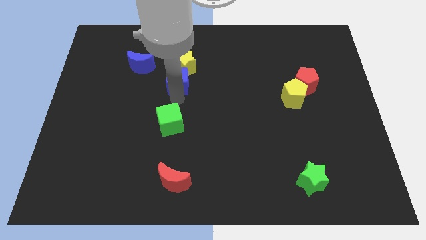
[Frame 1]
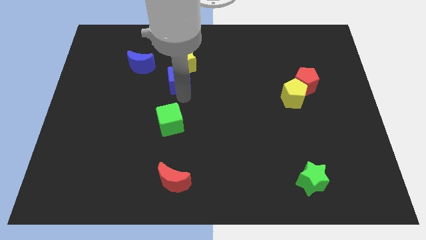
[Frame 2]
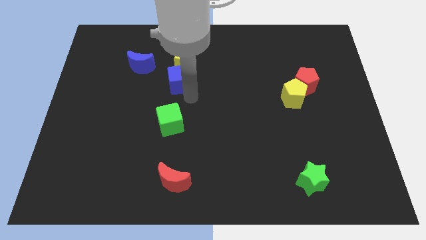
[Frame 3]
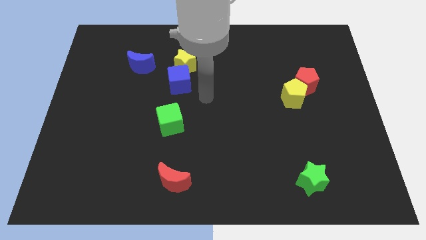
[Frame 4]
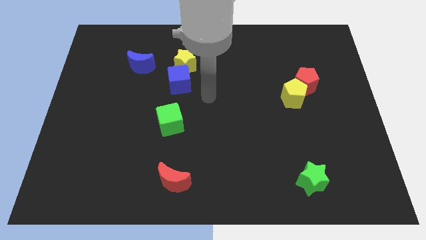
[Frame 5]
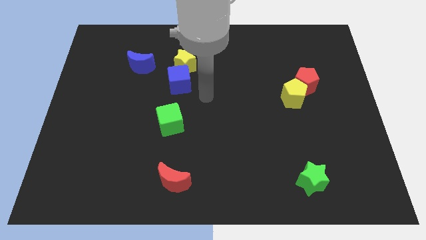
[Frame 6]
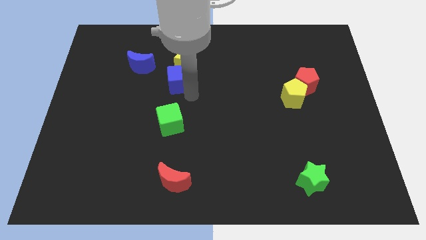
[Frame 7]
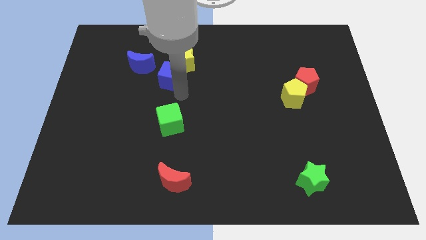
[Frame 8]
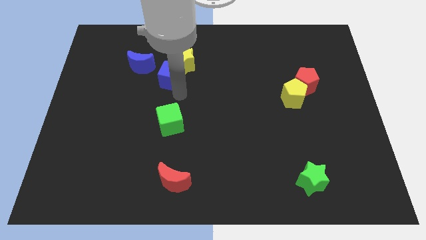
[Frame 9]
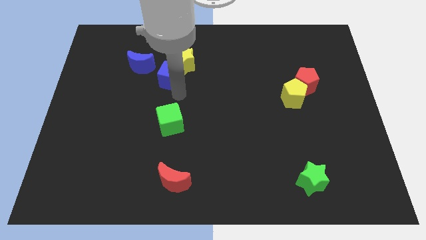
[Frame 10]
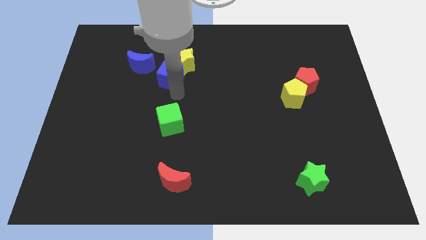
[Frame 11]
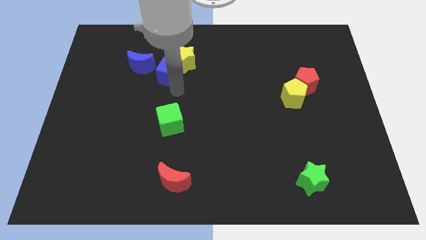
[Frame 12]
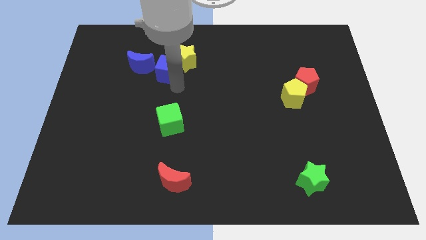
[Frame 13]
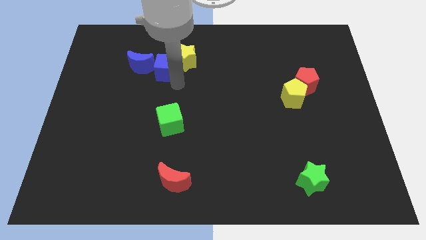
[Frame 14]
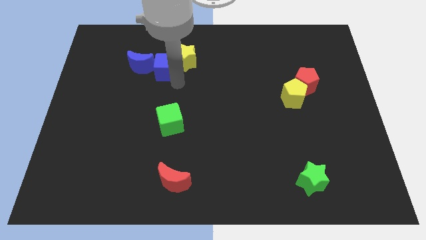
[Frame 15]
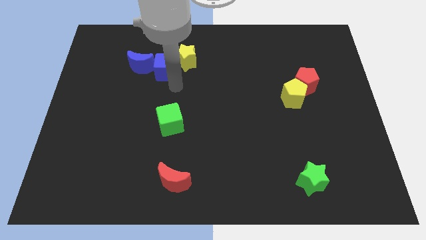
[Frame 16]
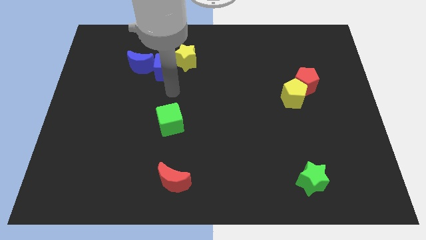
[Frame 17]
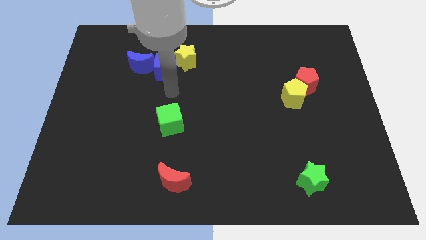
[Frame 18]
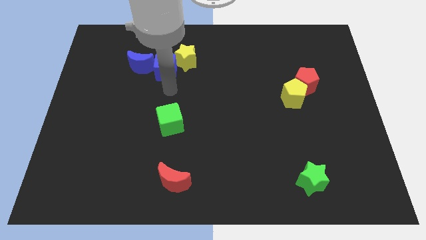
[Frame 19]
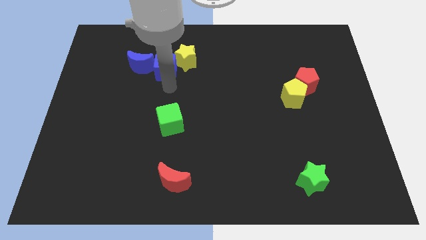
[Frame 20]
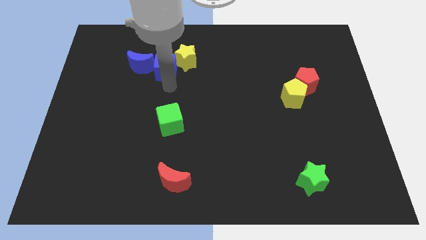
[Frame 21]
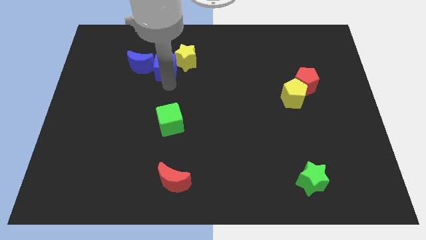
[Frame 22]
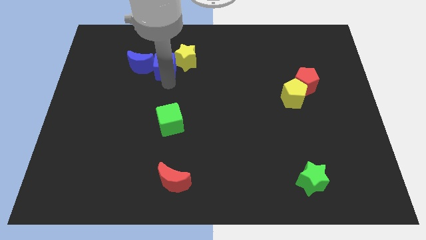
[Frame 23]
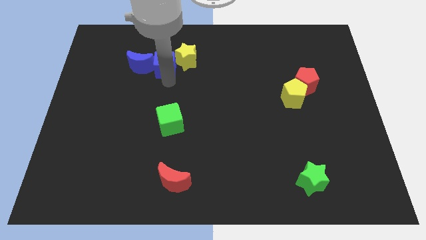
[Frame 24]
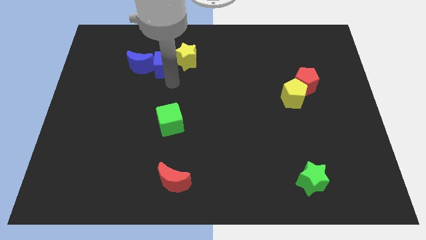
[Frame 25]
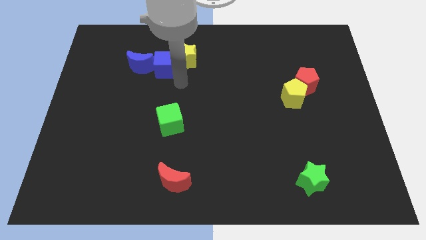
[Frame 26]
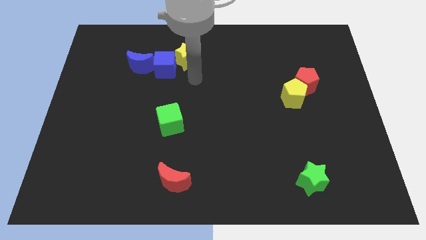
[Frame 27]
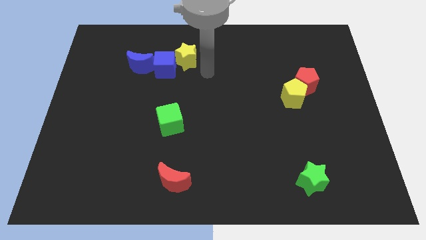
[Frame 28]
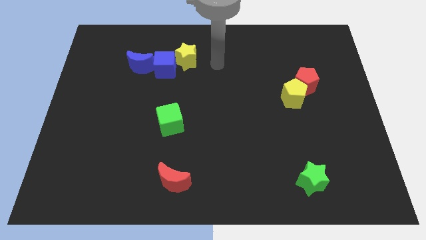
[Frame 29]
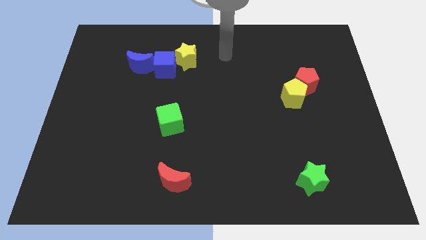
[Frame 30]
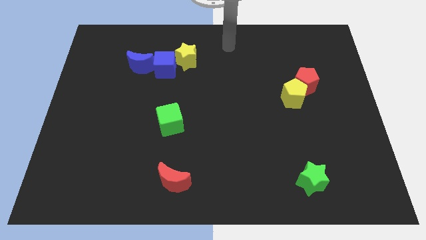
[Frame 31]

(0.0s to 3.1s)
place the blue cube in between the blue moon and the yellow star

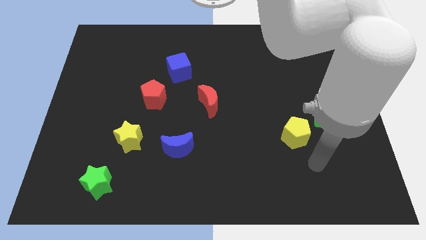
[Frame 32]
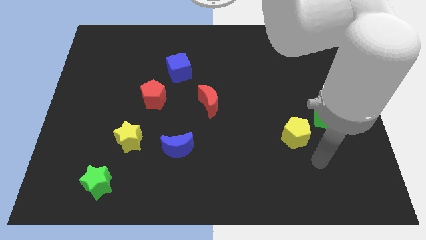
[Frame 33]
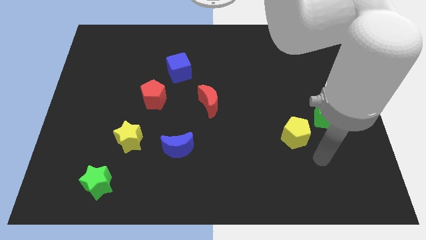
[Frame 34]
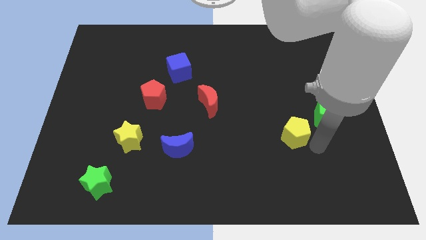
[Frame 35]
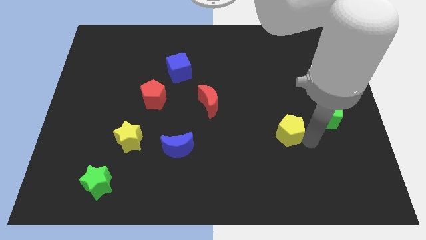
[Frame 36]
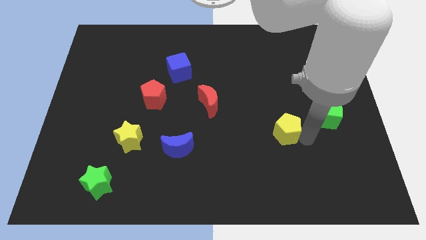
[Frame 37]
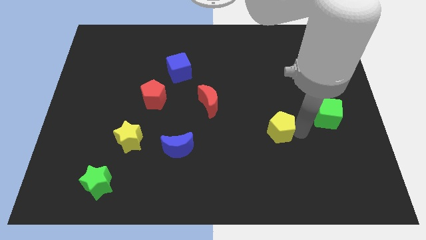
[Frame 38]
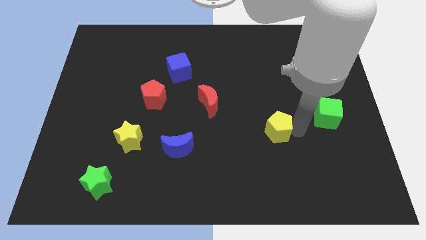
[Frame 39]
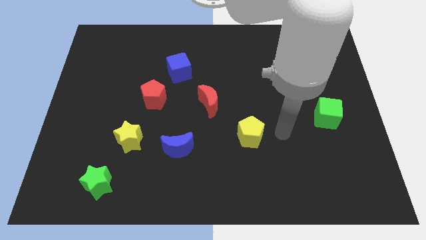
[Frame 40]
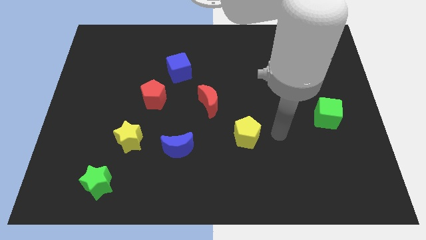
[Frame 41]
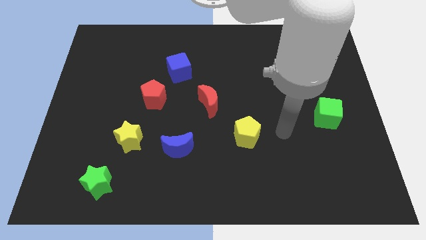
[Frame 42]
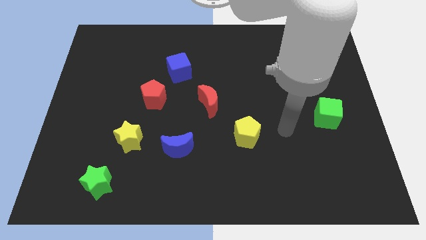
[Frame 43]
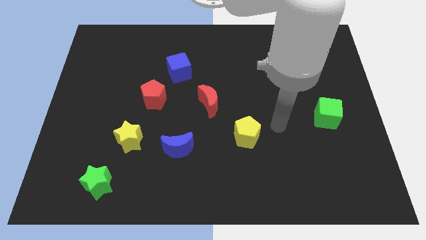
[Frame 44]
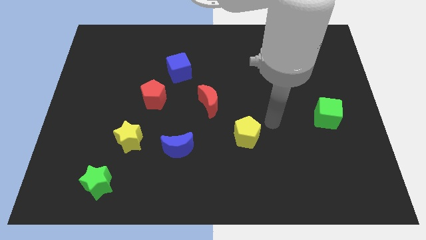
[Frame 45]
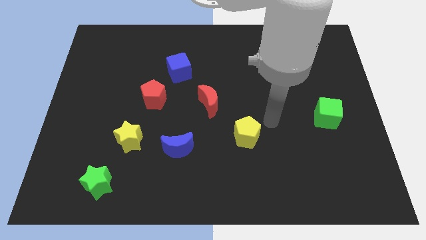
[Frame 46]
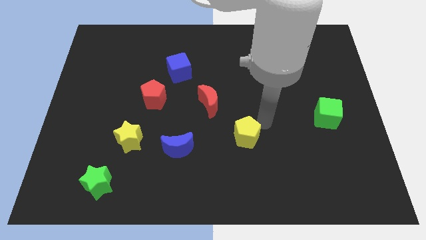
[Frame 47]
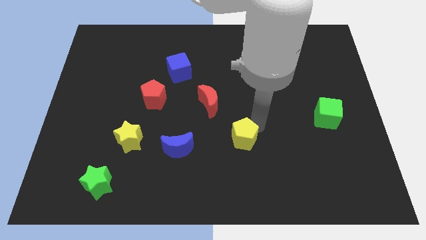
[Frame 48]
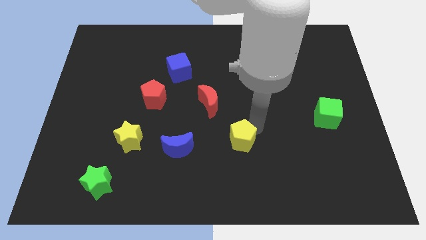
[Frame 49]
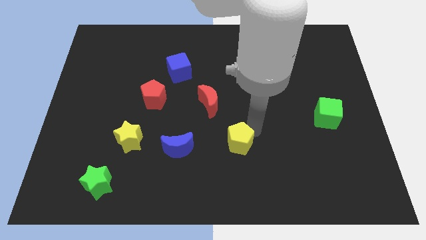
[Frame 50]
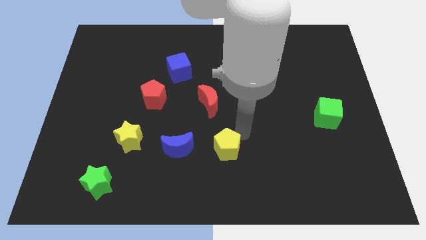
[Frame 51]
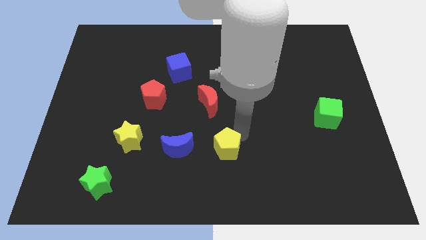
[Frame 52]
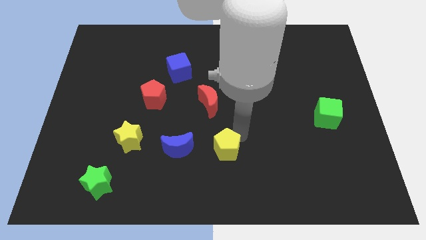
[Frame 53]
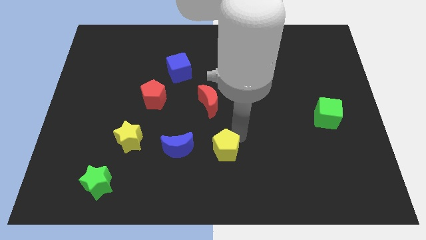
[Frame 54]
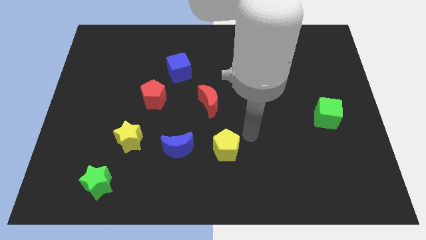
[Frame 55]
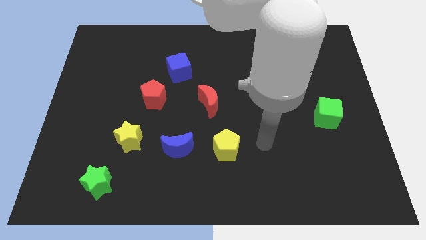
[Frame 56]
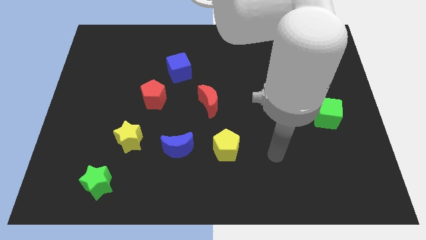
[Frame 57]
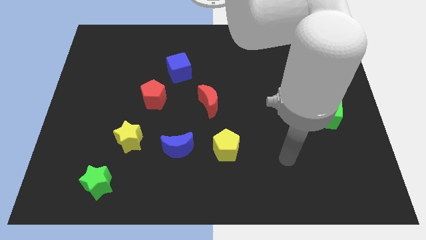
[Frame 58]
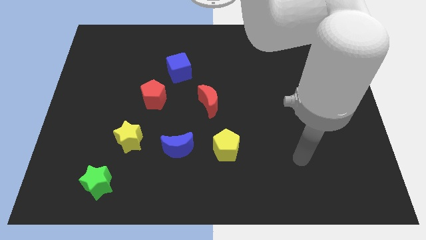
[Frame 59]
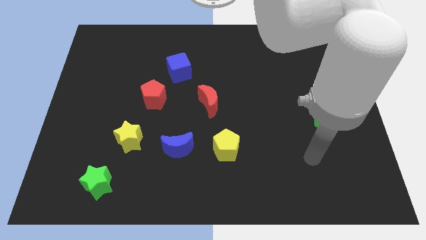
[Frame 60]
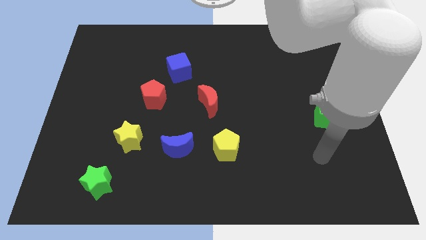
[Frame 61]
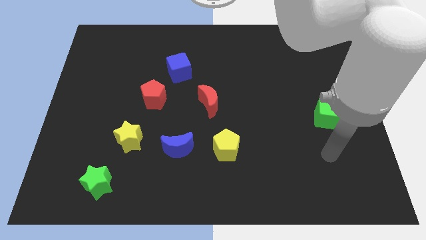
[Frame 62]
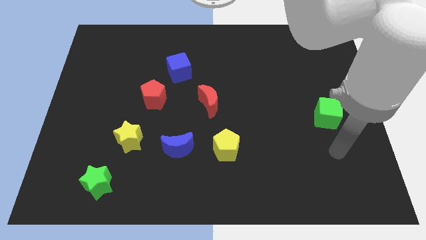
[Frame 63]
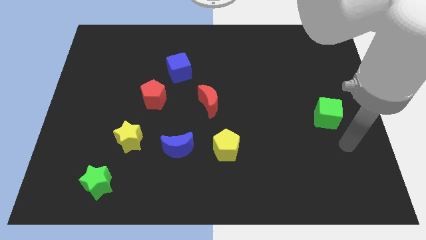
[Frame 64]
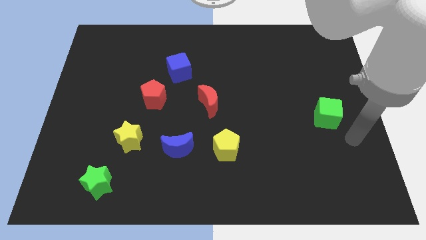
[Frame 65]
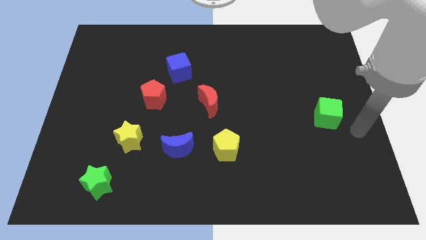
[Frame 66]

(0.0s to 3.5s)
move the yellow pentagon to the right of the blue moon

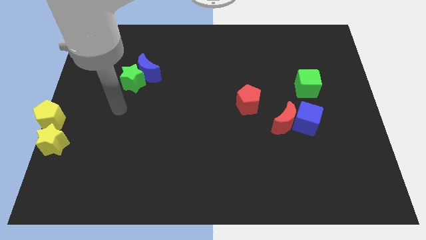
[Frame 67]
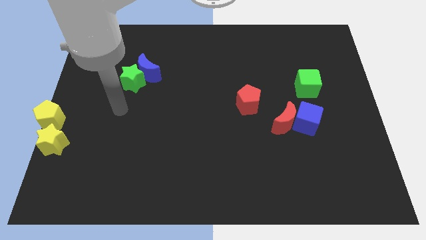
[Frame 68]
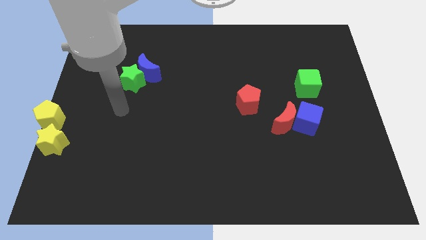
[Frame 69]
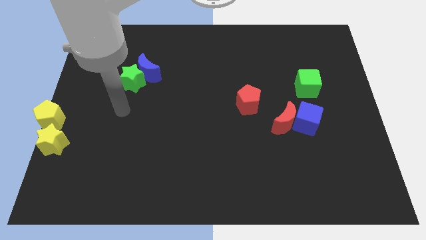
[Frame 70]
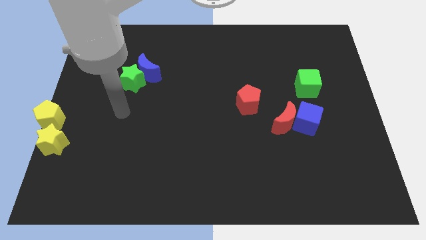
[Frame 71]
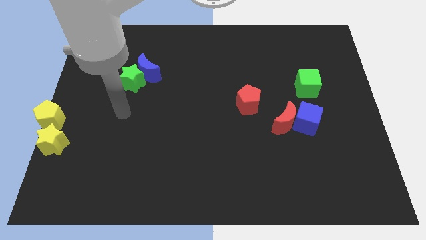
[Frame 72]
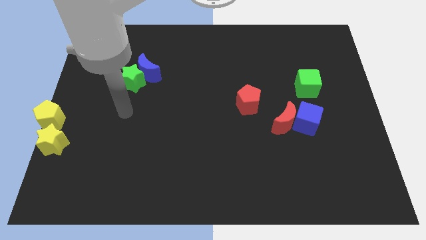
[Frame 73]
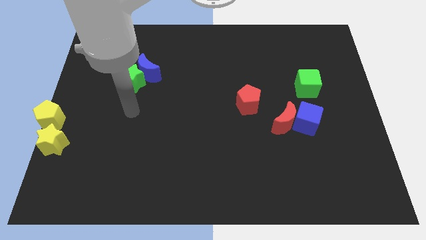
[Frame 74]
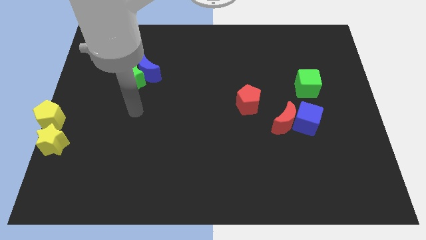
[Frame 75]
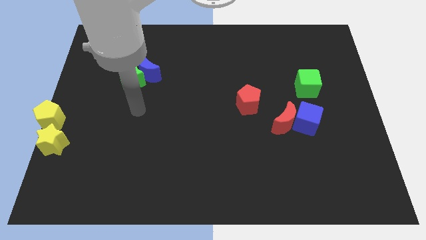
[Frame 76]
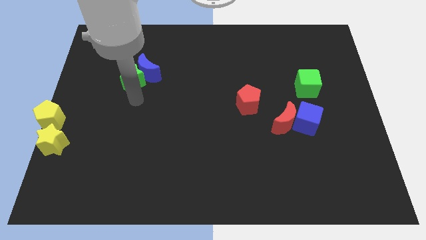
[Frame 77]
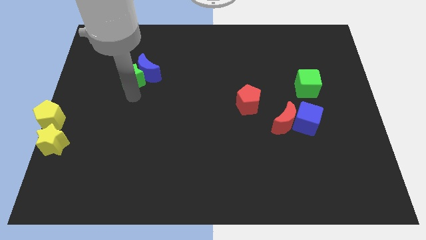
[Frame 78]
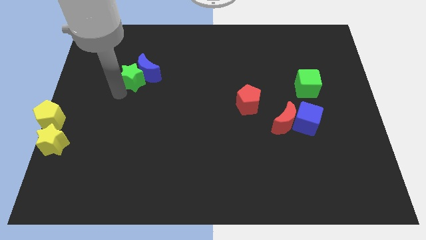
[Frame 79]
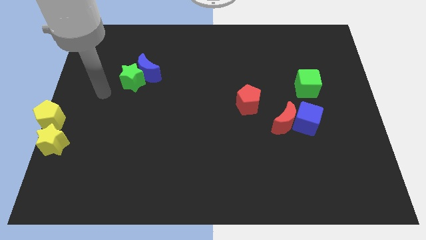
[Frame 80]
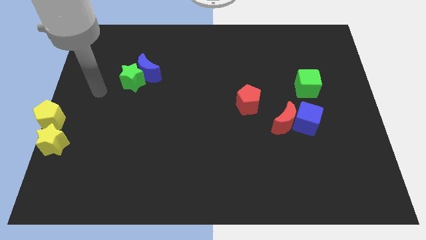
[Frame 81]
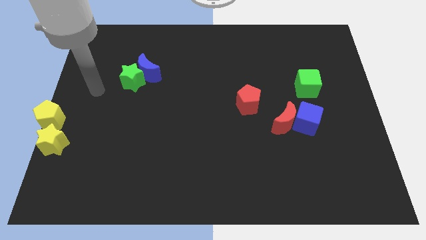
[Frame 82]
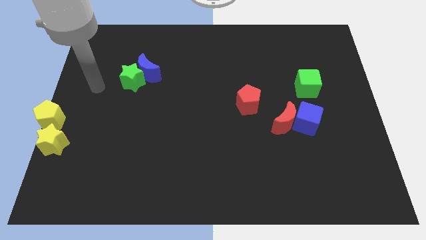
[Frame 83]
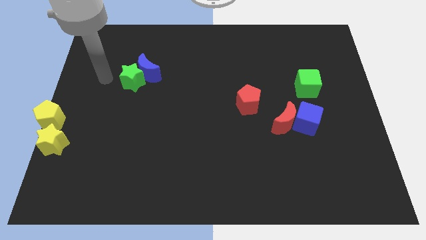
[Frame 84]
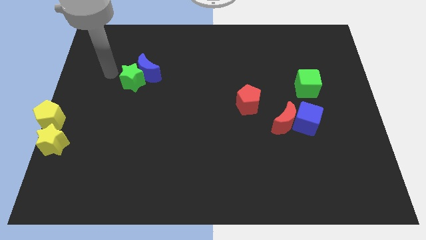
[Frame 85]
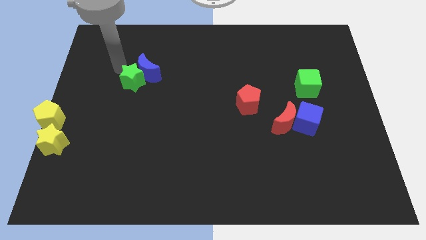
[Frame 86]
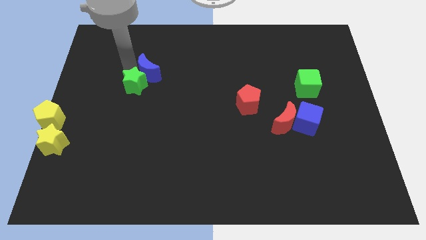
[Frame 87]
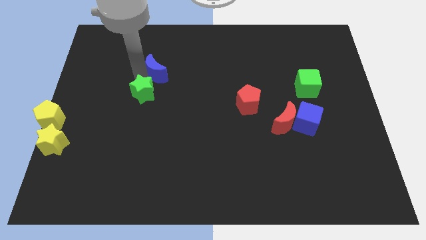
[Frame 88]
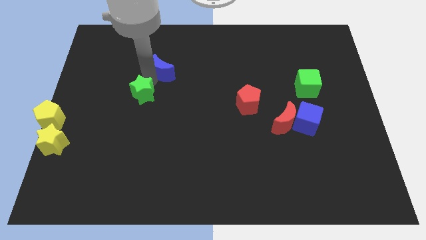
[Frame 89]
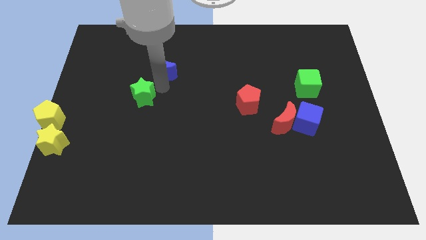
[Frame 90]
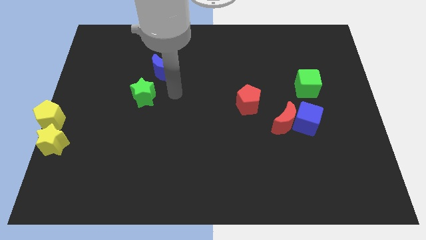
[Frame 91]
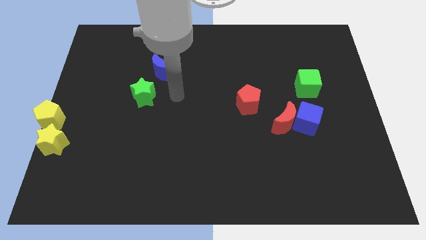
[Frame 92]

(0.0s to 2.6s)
place your arm between the green star and blue crescent

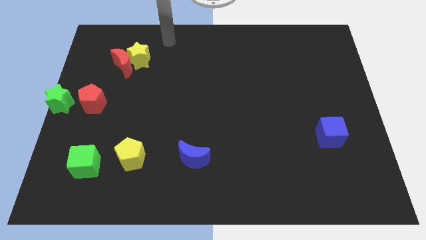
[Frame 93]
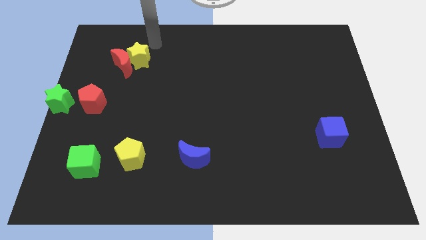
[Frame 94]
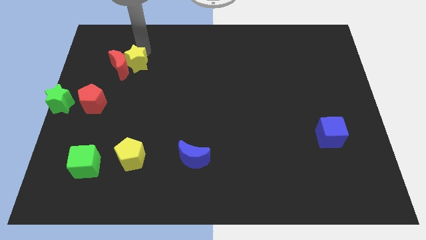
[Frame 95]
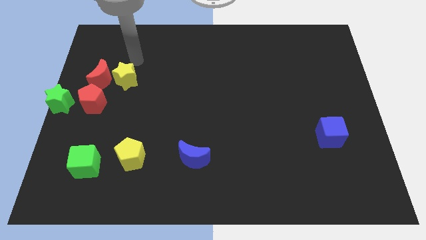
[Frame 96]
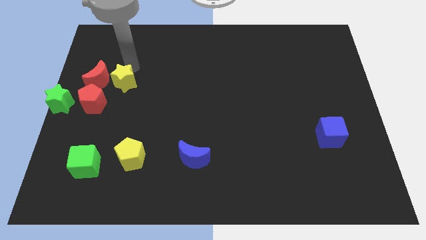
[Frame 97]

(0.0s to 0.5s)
push the red crescent to the top of the red pentagon with the help of the yellow star
